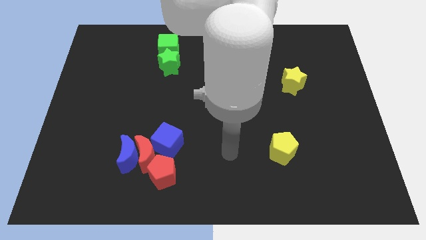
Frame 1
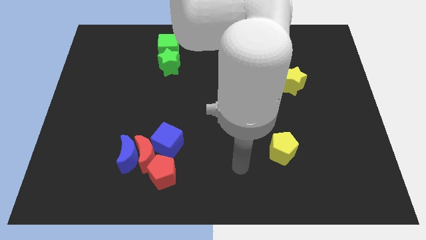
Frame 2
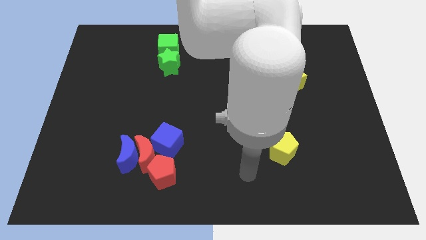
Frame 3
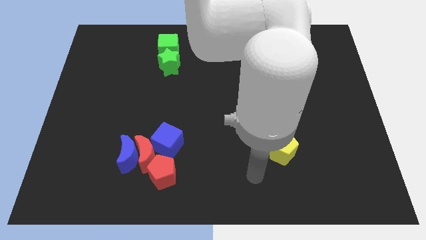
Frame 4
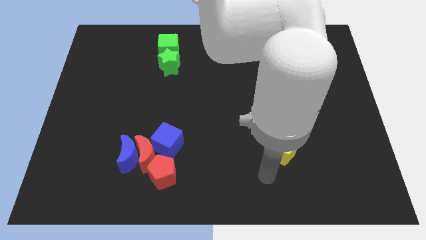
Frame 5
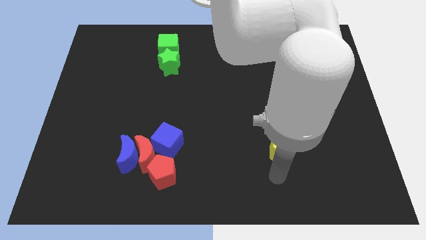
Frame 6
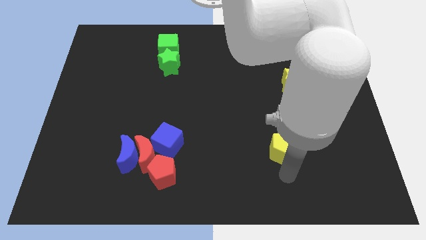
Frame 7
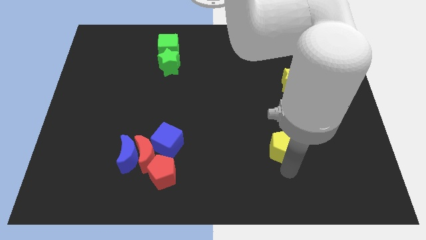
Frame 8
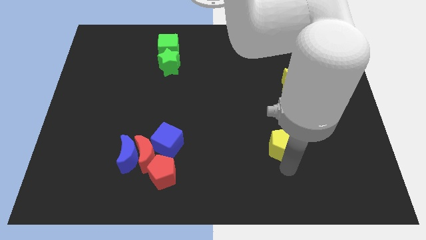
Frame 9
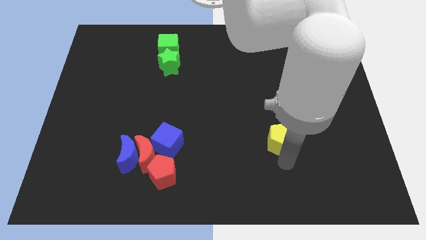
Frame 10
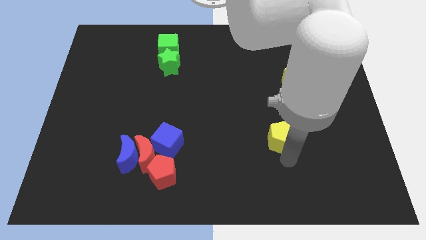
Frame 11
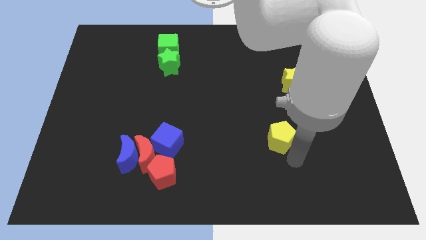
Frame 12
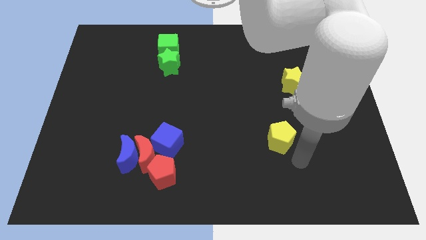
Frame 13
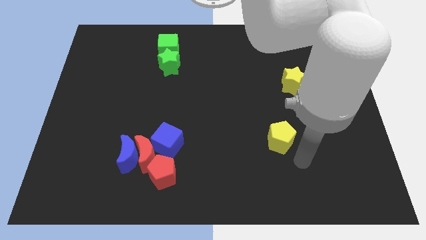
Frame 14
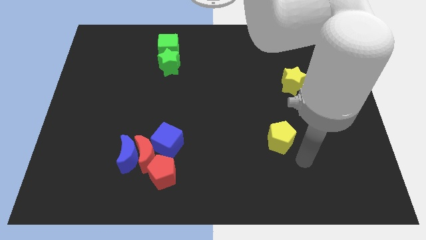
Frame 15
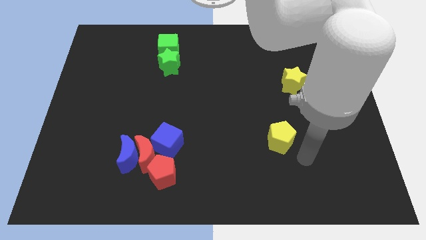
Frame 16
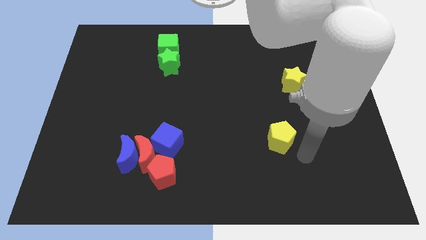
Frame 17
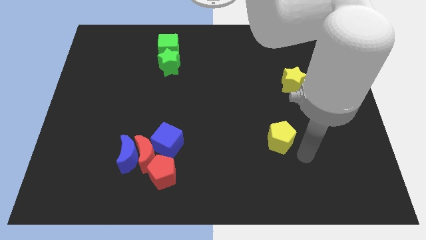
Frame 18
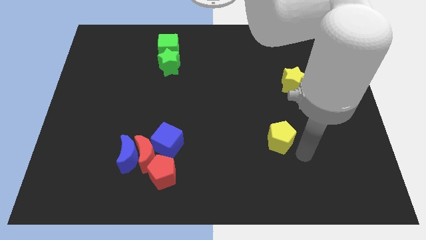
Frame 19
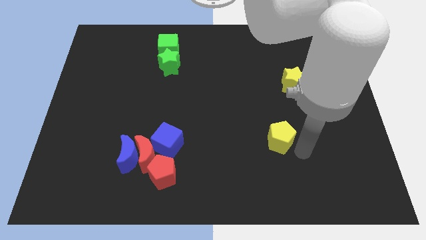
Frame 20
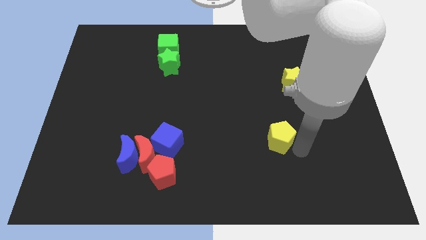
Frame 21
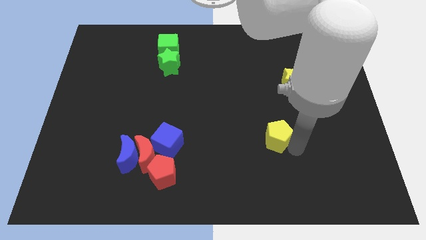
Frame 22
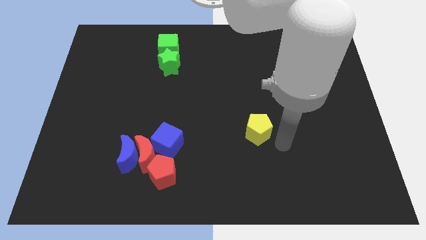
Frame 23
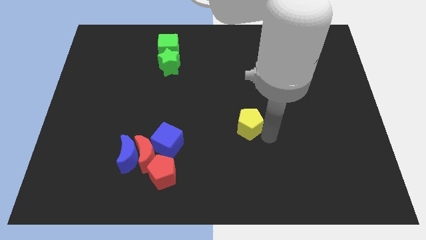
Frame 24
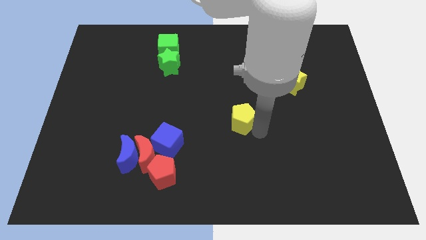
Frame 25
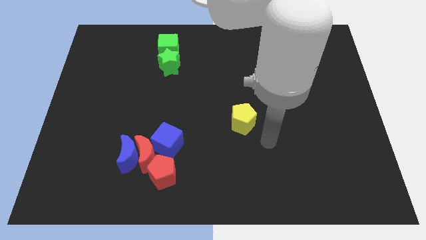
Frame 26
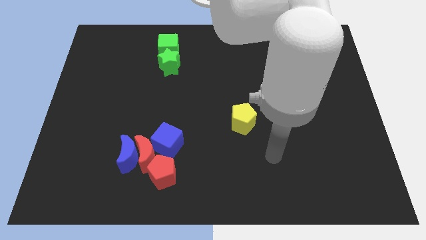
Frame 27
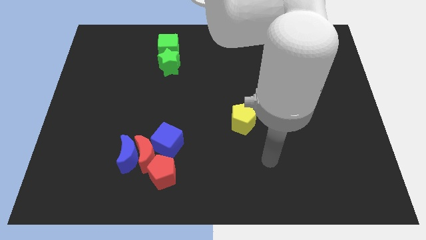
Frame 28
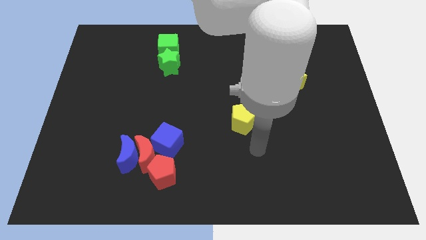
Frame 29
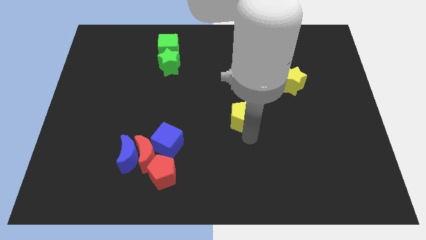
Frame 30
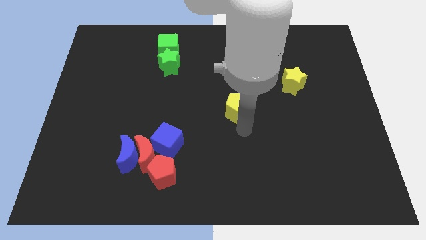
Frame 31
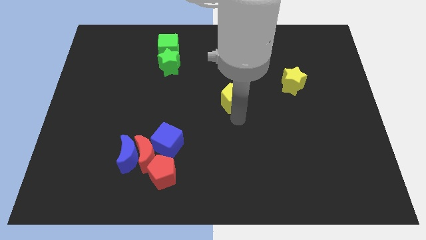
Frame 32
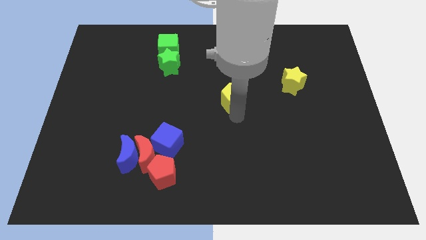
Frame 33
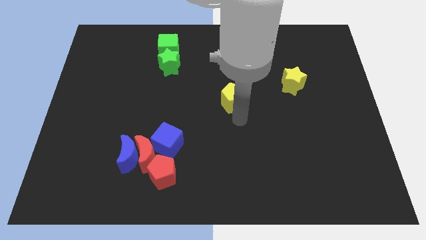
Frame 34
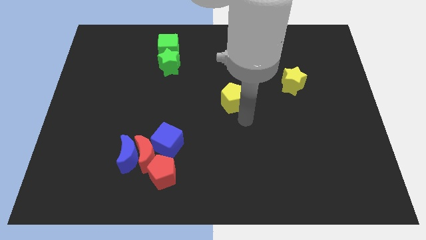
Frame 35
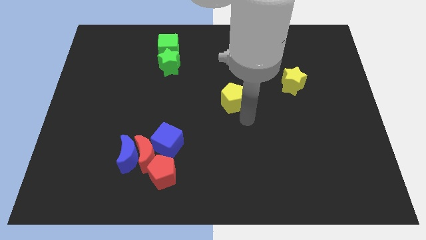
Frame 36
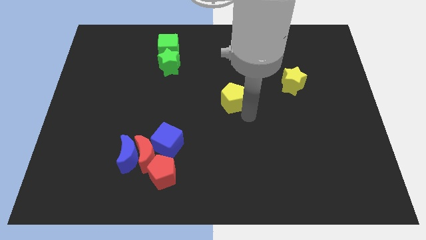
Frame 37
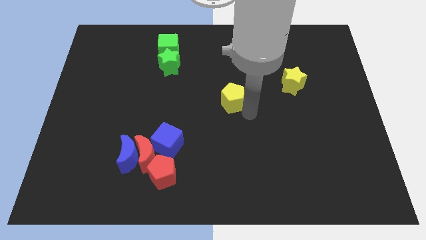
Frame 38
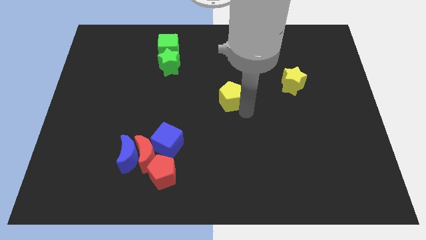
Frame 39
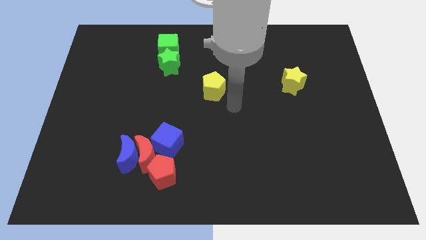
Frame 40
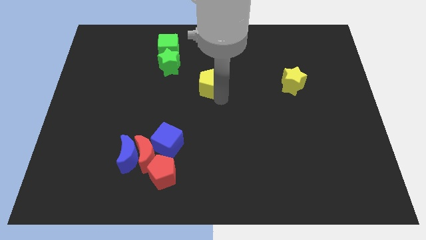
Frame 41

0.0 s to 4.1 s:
drag the yellow pentagon to the center

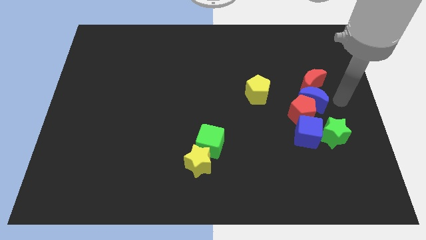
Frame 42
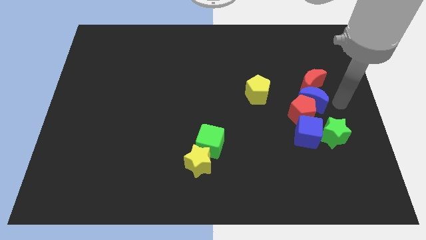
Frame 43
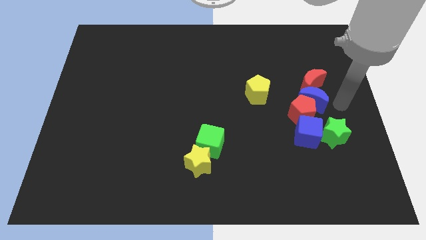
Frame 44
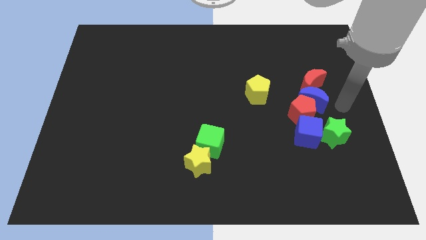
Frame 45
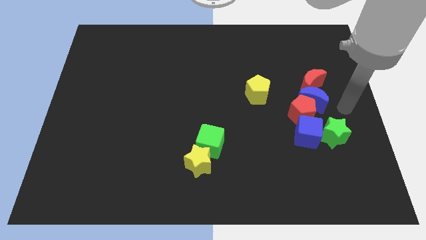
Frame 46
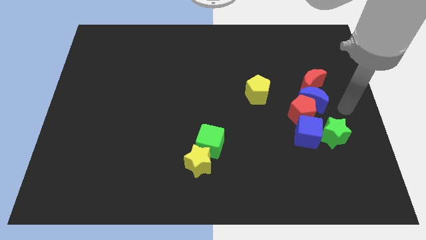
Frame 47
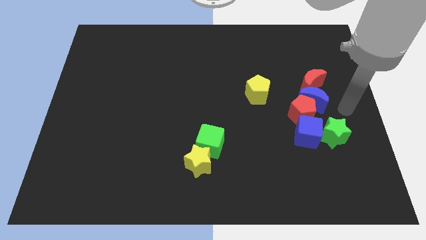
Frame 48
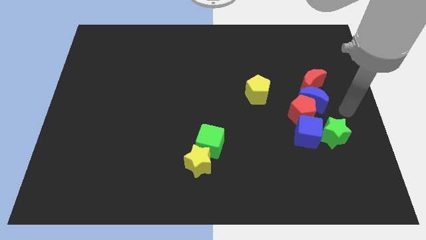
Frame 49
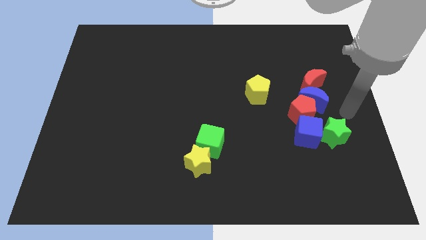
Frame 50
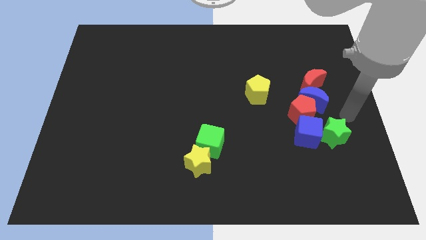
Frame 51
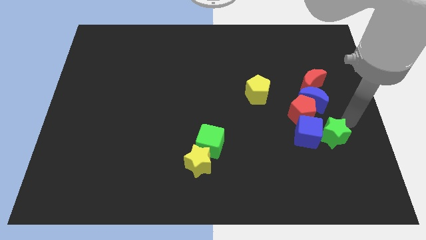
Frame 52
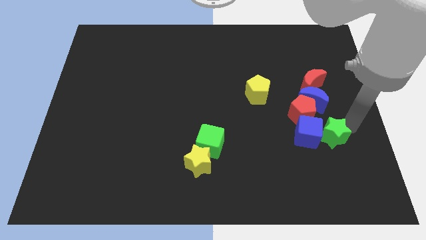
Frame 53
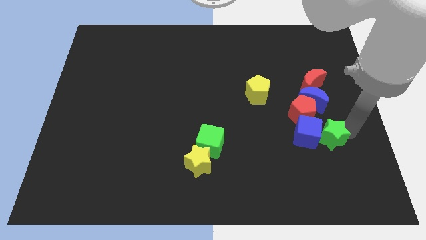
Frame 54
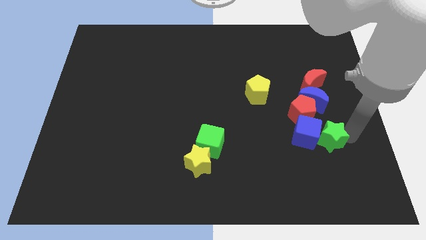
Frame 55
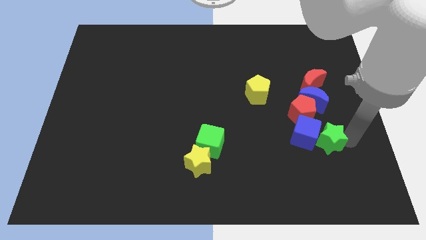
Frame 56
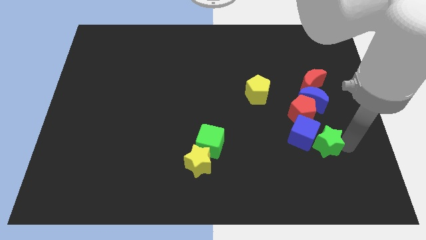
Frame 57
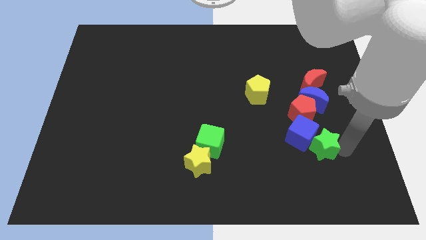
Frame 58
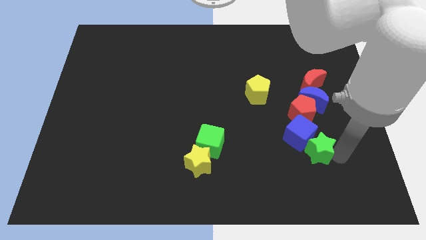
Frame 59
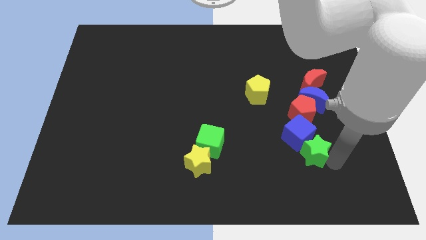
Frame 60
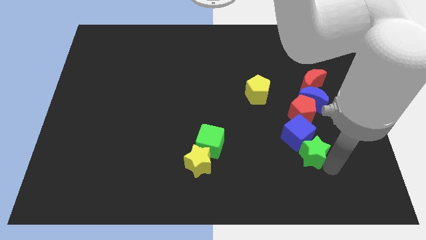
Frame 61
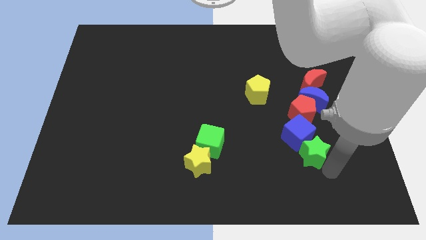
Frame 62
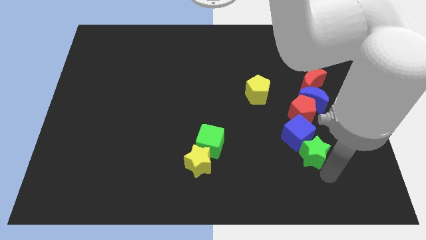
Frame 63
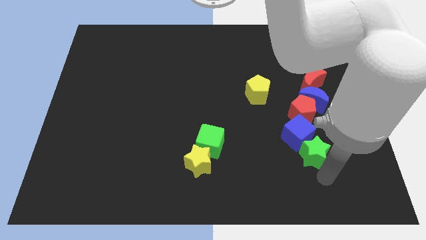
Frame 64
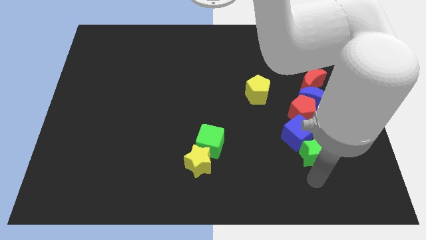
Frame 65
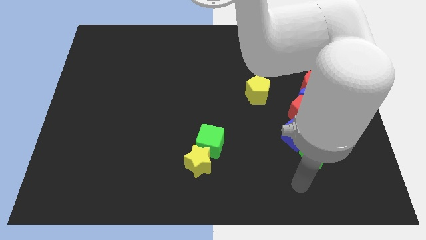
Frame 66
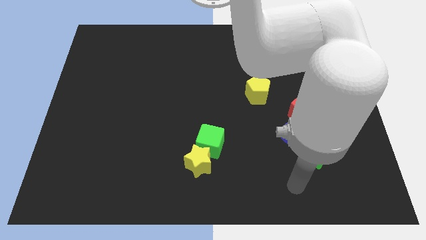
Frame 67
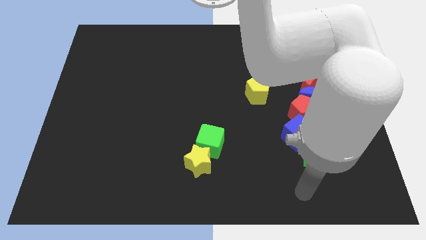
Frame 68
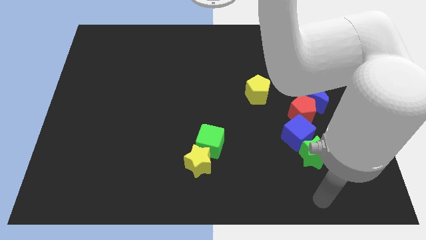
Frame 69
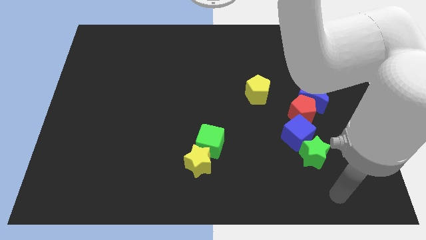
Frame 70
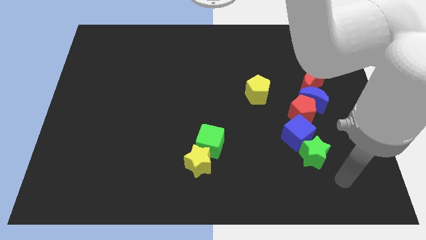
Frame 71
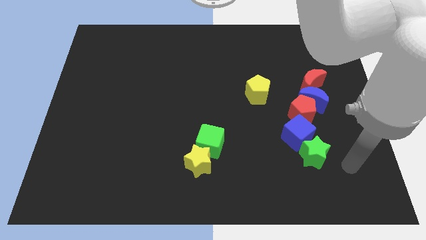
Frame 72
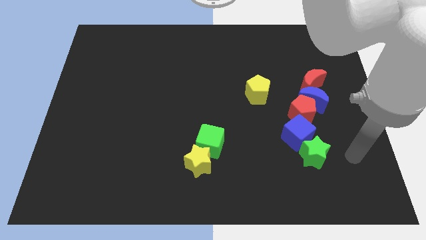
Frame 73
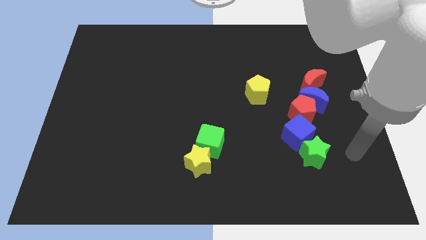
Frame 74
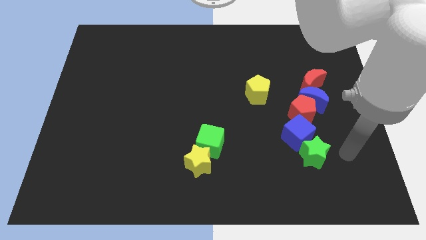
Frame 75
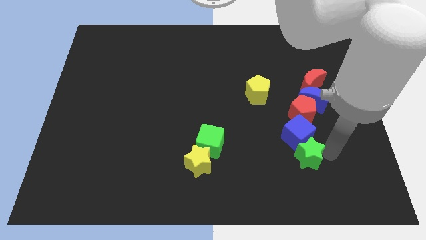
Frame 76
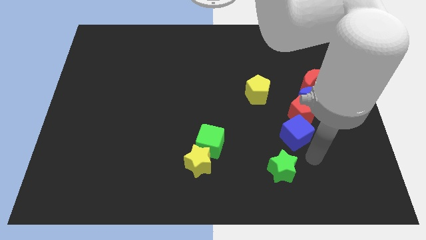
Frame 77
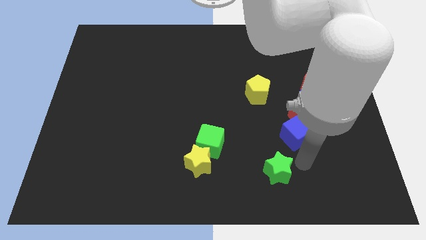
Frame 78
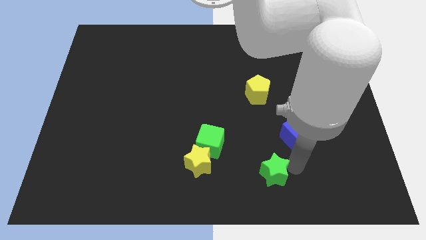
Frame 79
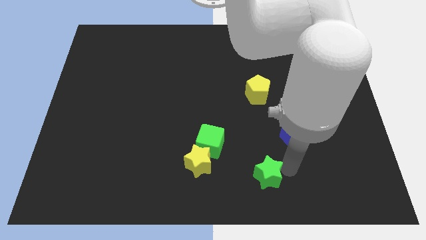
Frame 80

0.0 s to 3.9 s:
separate the green star from blue cube

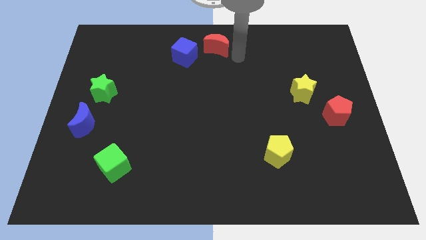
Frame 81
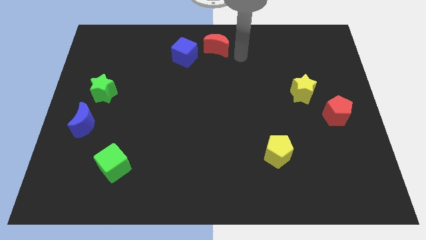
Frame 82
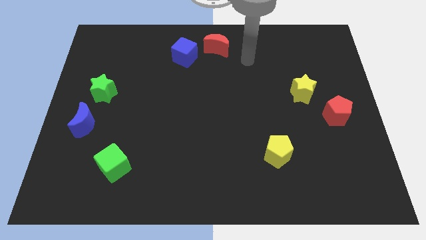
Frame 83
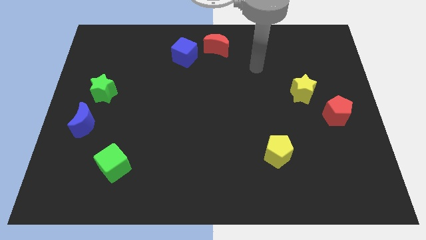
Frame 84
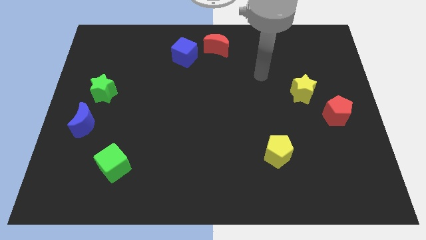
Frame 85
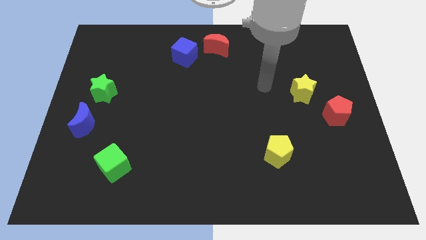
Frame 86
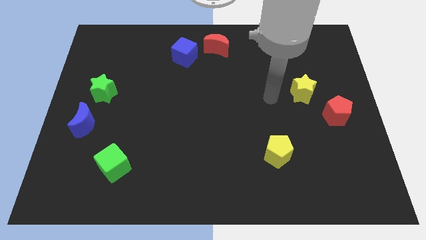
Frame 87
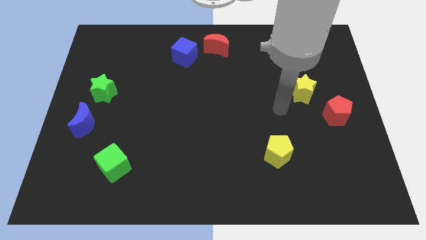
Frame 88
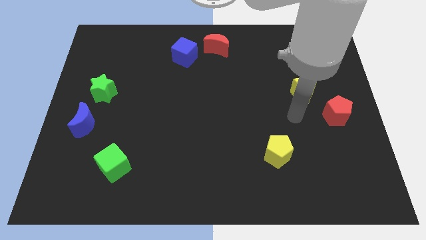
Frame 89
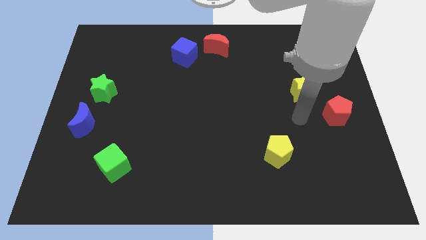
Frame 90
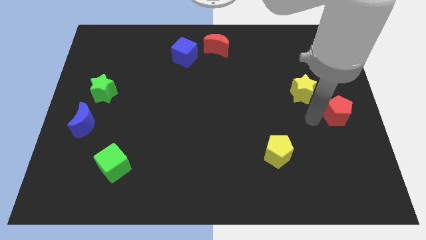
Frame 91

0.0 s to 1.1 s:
move your arm to the left of red pentagon

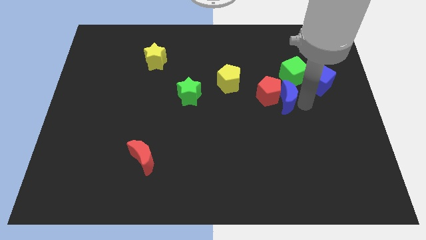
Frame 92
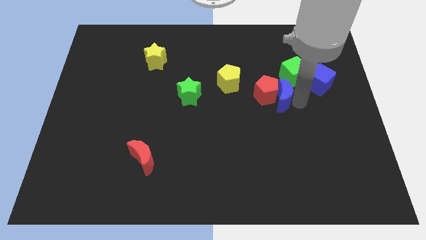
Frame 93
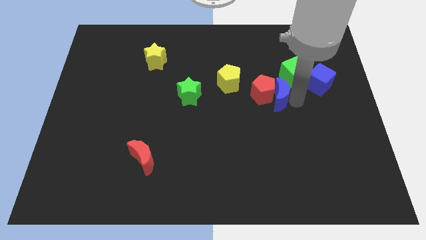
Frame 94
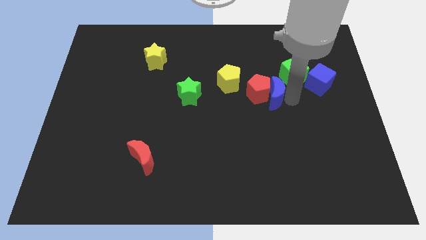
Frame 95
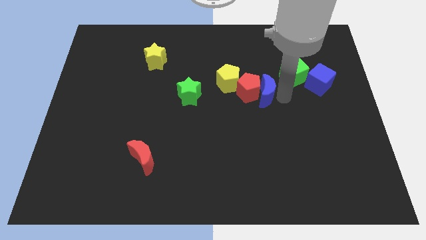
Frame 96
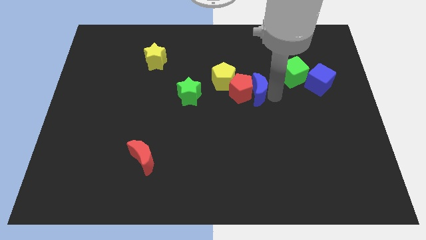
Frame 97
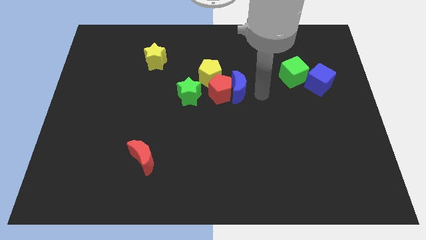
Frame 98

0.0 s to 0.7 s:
push blue crescent towards yellow pentagon with red pentagon
